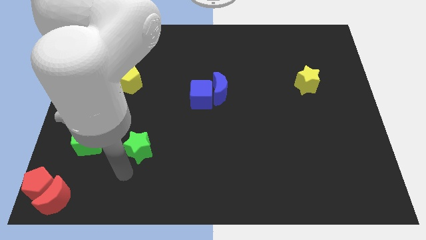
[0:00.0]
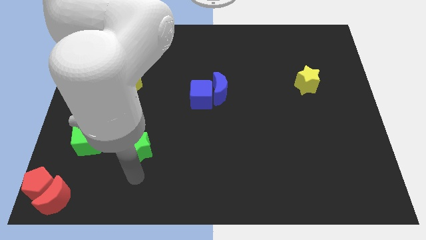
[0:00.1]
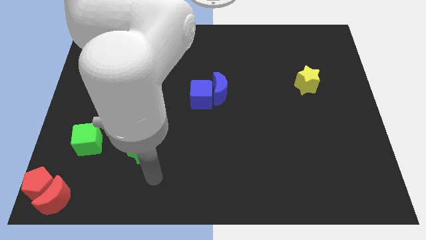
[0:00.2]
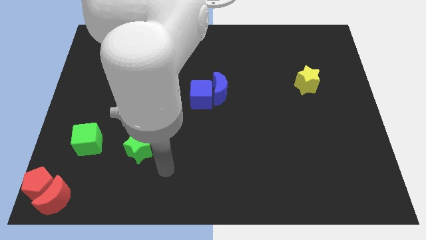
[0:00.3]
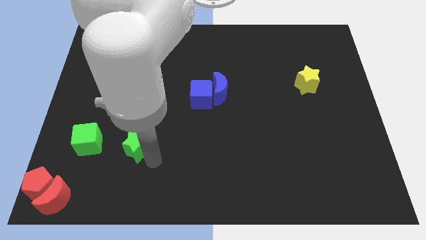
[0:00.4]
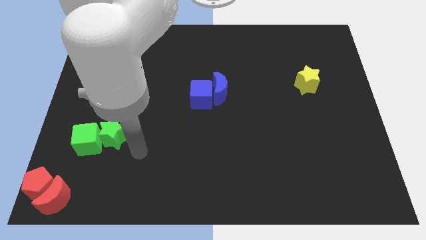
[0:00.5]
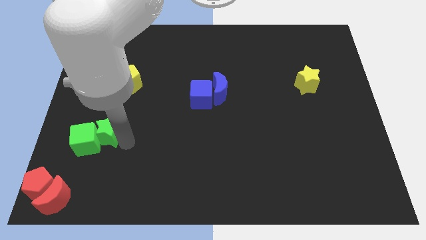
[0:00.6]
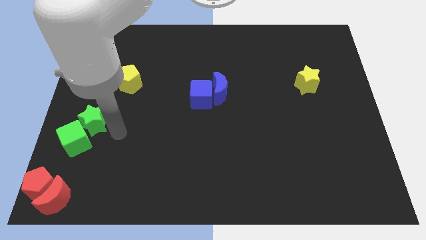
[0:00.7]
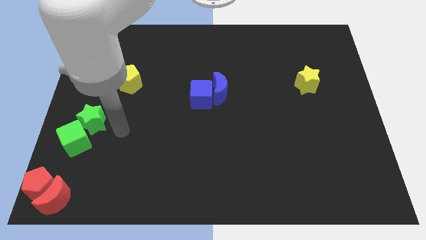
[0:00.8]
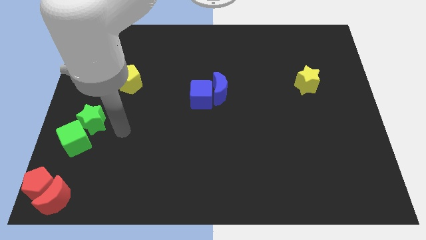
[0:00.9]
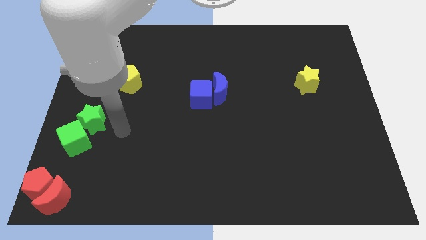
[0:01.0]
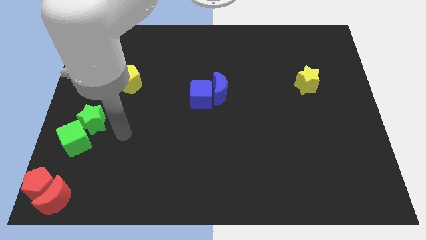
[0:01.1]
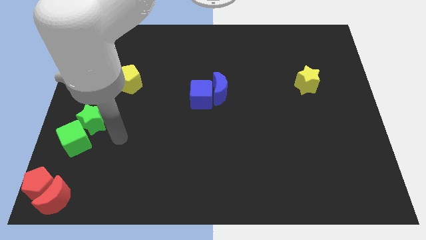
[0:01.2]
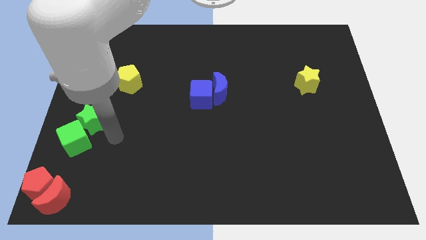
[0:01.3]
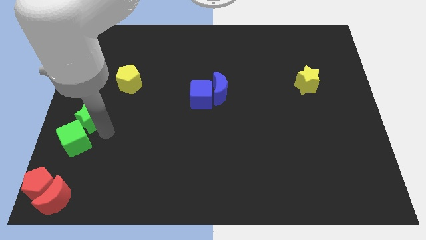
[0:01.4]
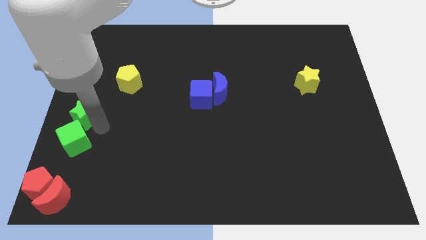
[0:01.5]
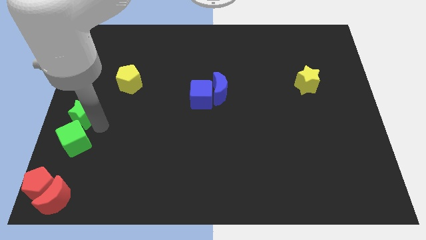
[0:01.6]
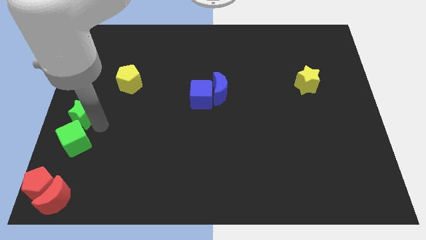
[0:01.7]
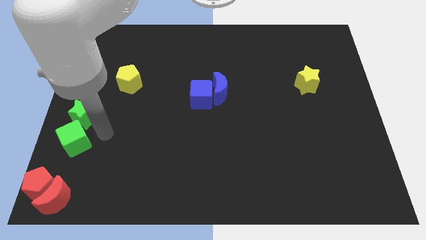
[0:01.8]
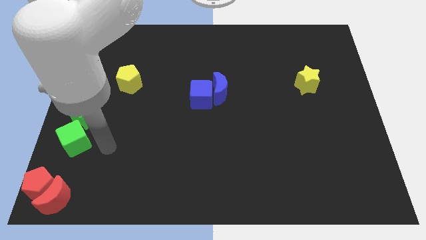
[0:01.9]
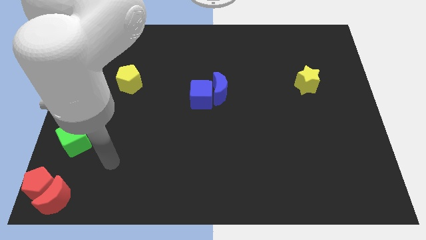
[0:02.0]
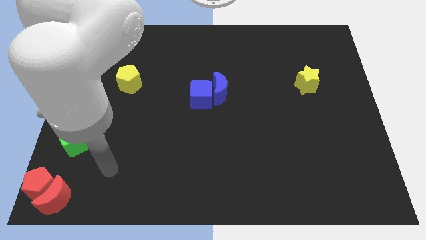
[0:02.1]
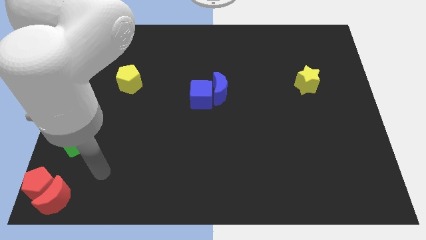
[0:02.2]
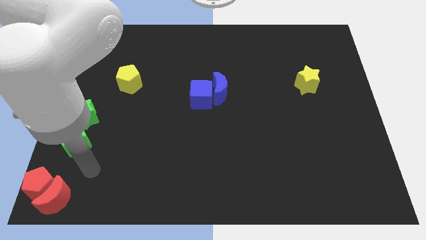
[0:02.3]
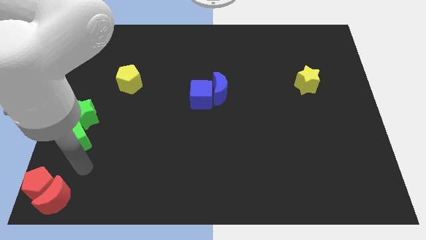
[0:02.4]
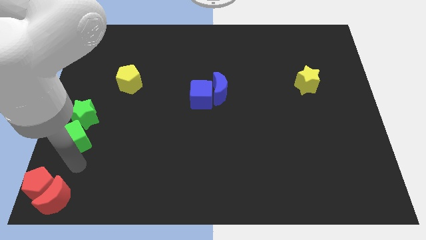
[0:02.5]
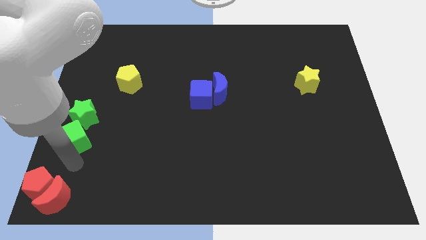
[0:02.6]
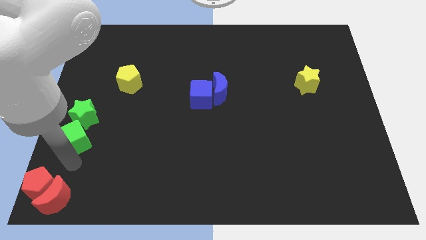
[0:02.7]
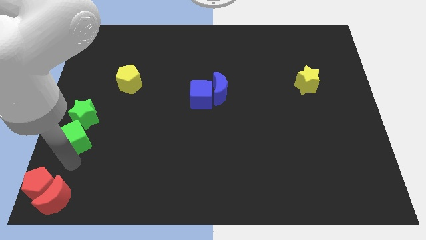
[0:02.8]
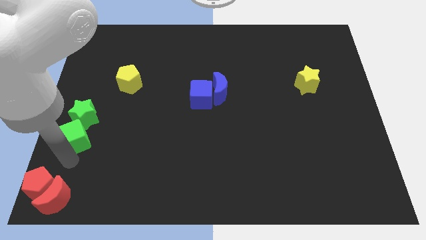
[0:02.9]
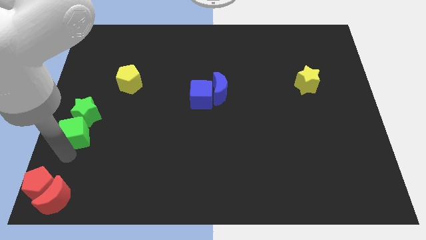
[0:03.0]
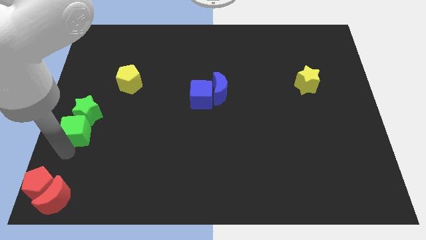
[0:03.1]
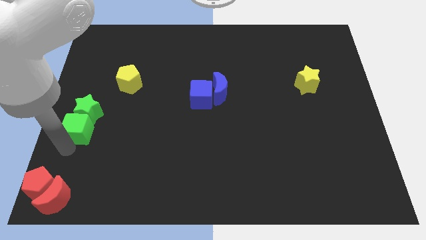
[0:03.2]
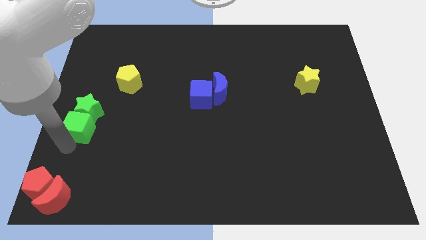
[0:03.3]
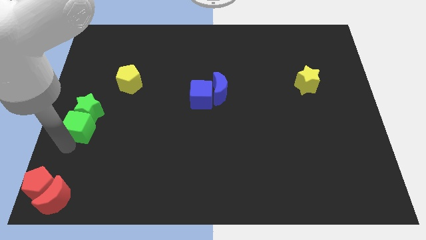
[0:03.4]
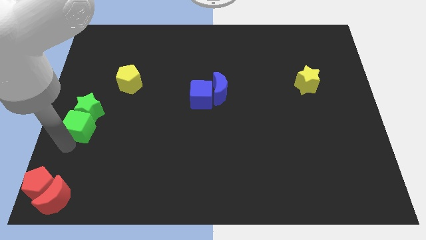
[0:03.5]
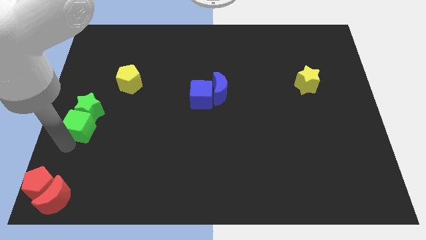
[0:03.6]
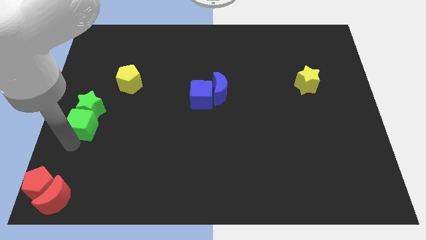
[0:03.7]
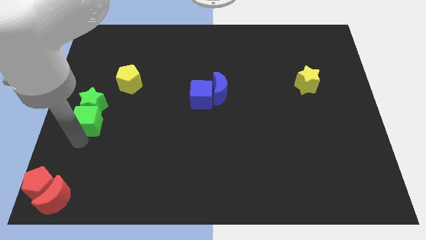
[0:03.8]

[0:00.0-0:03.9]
move the green star above the green cube

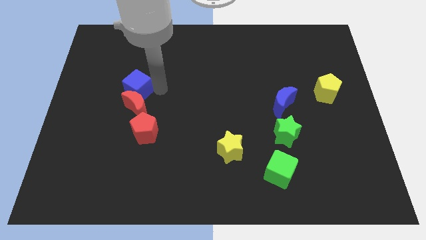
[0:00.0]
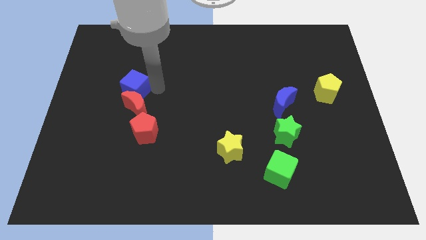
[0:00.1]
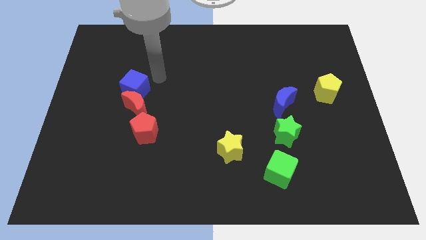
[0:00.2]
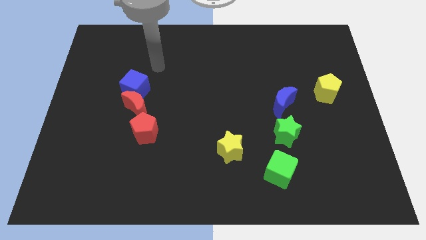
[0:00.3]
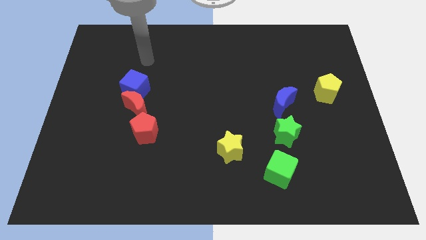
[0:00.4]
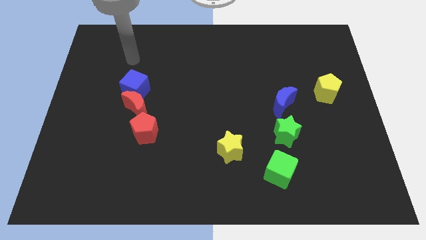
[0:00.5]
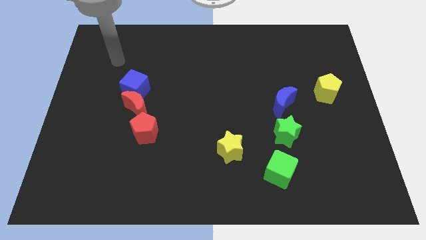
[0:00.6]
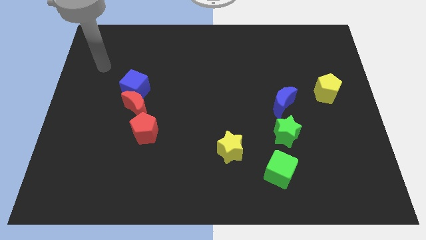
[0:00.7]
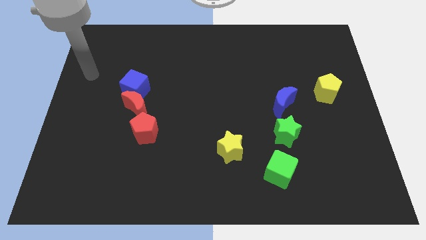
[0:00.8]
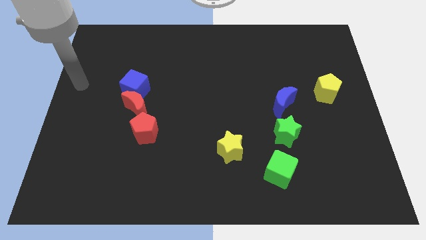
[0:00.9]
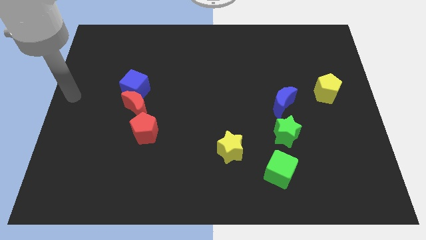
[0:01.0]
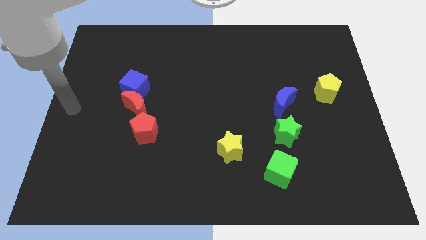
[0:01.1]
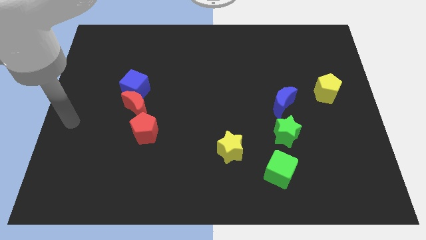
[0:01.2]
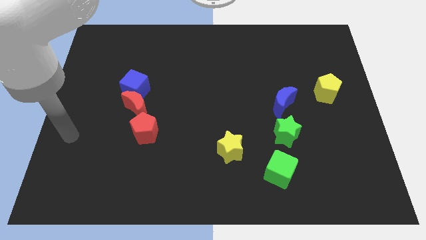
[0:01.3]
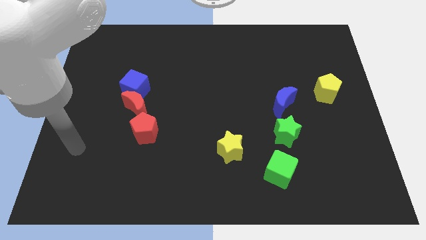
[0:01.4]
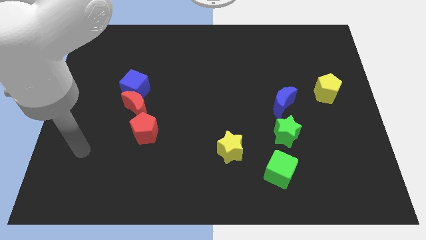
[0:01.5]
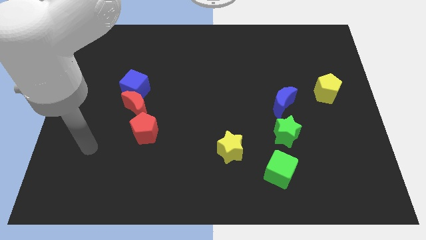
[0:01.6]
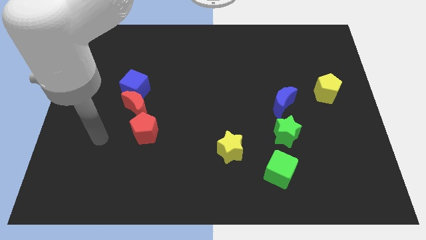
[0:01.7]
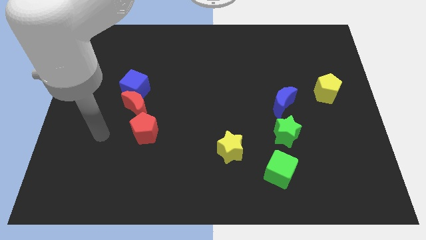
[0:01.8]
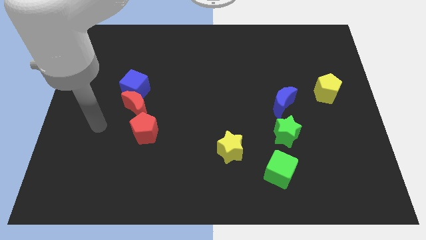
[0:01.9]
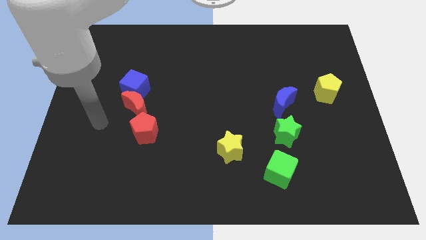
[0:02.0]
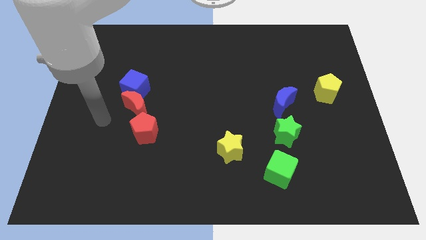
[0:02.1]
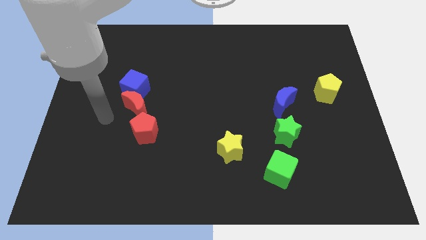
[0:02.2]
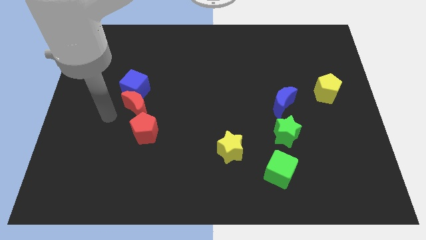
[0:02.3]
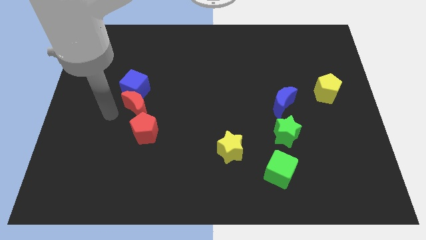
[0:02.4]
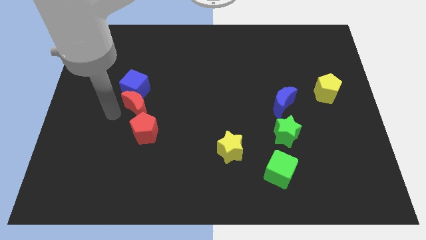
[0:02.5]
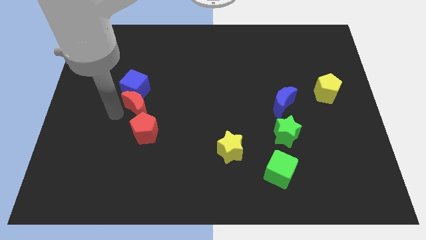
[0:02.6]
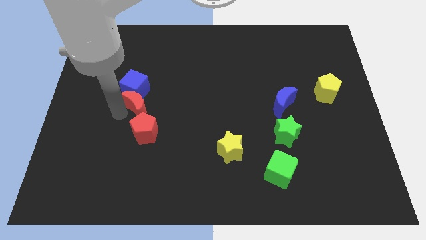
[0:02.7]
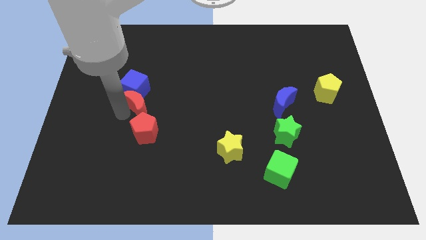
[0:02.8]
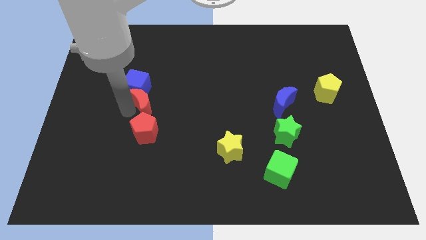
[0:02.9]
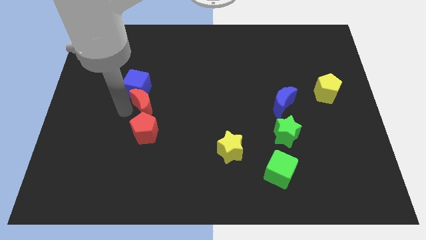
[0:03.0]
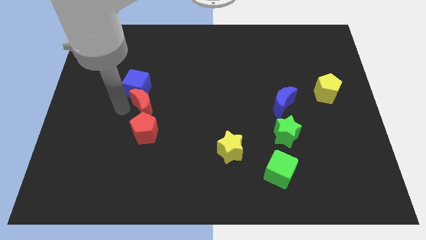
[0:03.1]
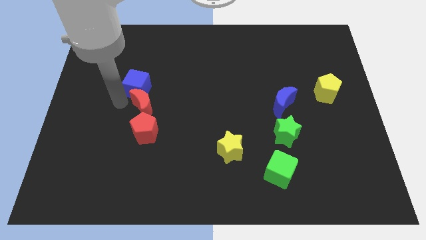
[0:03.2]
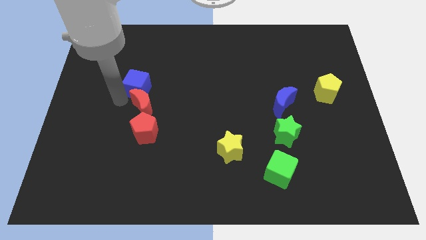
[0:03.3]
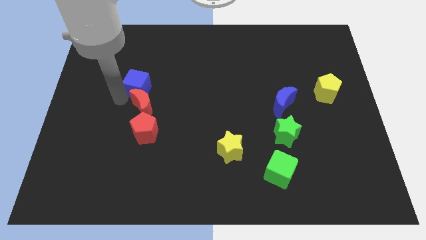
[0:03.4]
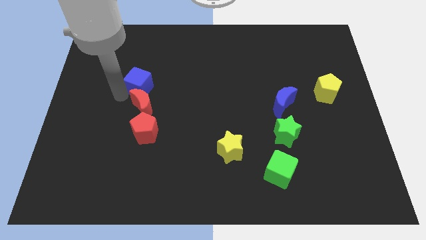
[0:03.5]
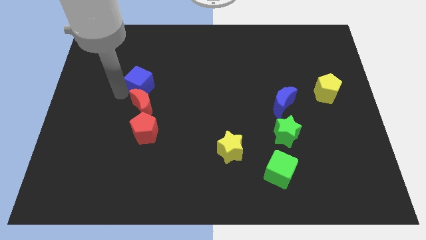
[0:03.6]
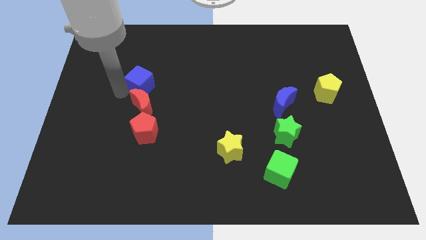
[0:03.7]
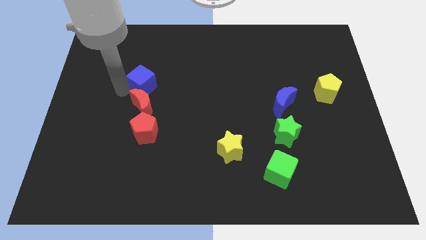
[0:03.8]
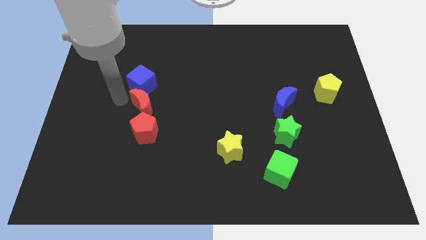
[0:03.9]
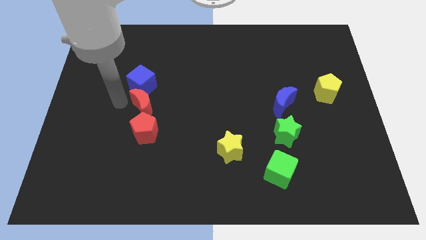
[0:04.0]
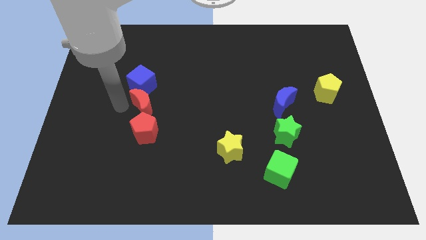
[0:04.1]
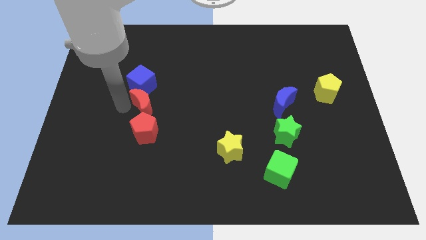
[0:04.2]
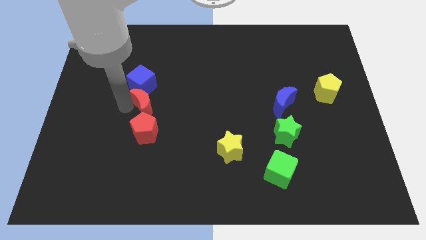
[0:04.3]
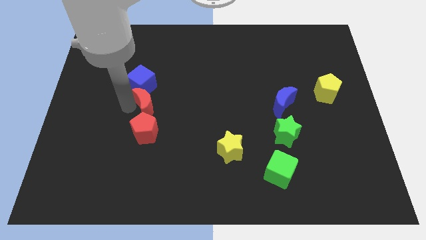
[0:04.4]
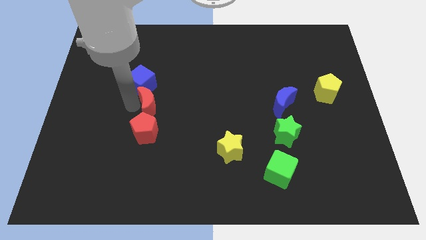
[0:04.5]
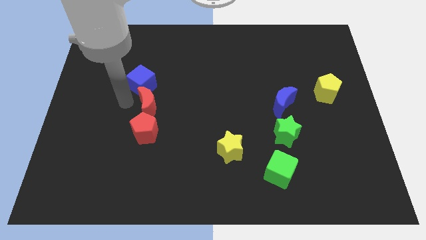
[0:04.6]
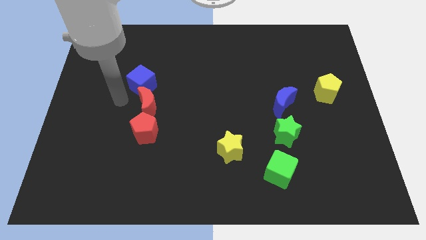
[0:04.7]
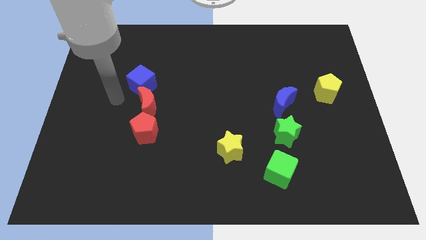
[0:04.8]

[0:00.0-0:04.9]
place the red crescent in between blue cube and red pentagon
